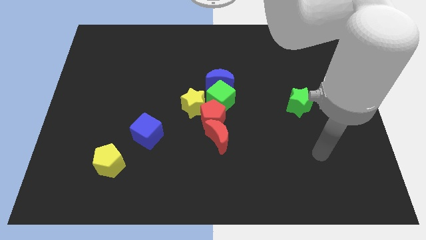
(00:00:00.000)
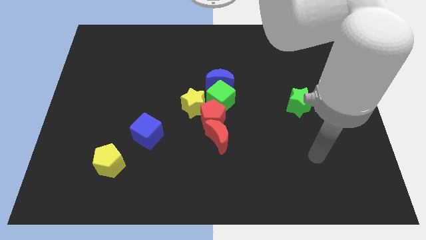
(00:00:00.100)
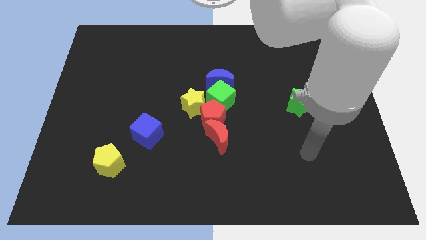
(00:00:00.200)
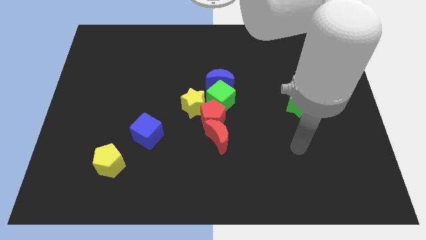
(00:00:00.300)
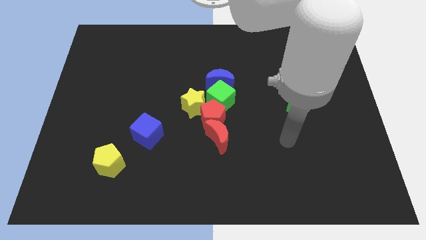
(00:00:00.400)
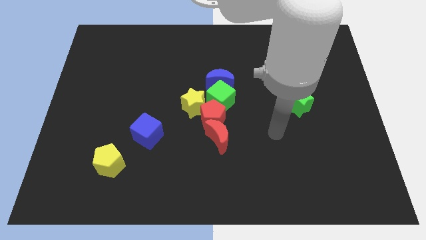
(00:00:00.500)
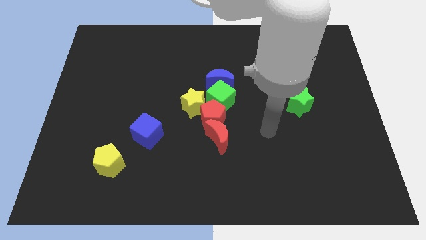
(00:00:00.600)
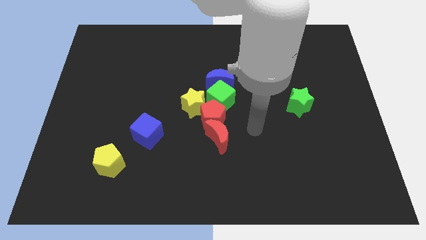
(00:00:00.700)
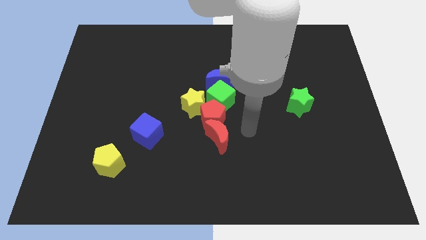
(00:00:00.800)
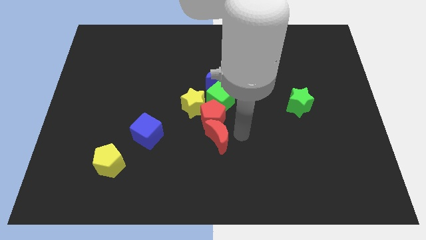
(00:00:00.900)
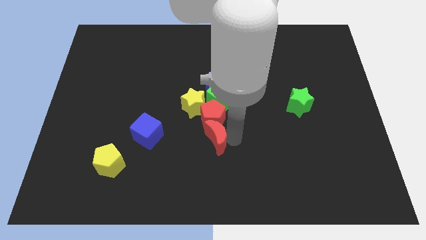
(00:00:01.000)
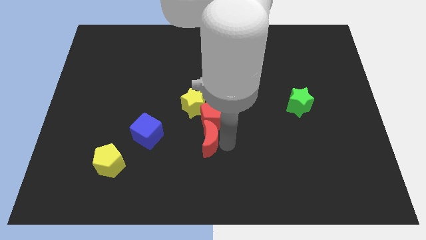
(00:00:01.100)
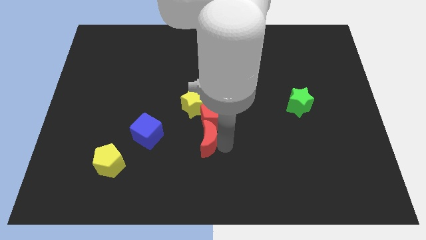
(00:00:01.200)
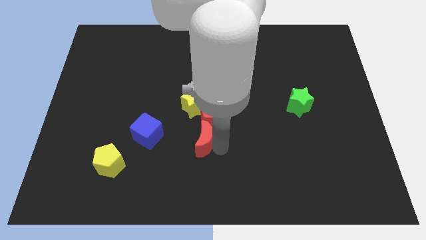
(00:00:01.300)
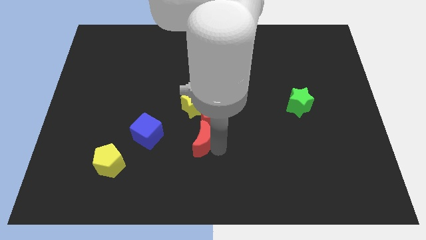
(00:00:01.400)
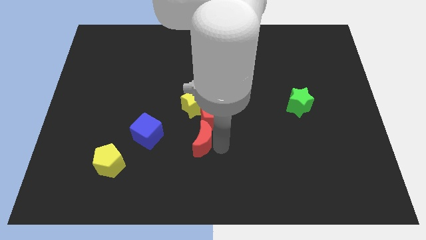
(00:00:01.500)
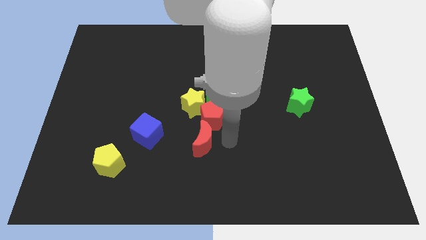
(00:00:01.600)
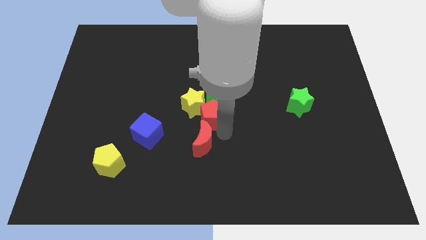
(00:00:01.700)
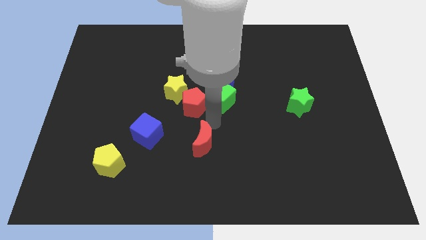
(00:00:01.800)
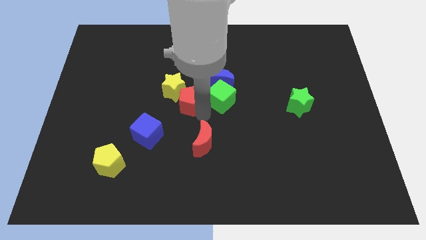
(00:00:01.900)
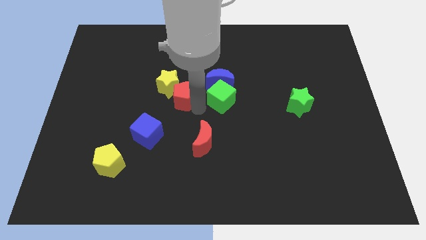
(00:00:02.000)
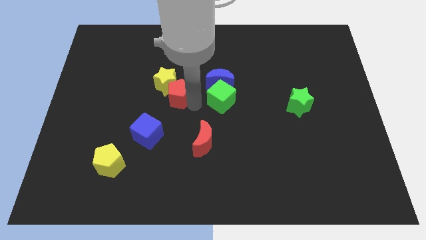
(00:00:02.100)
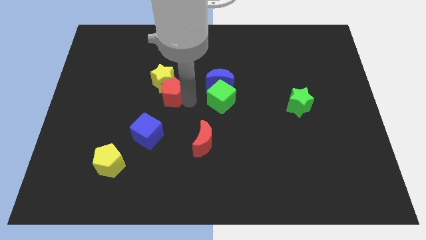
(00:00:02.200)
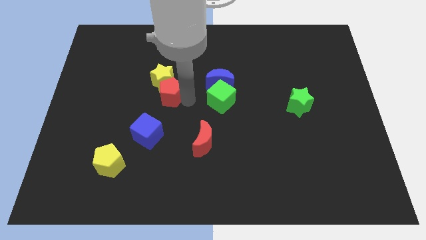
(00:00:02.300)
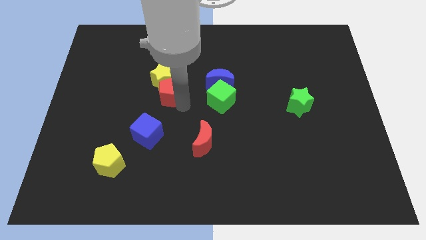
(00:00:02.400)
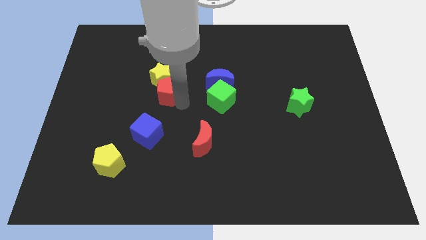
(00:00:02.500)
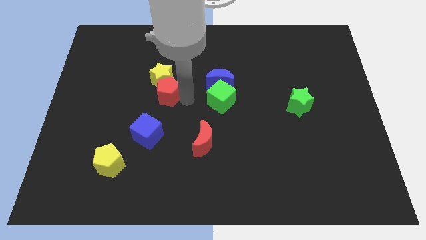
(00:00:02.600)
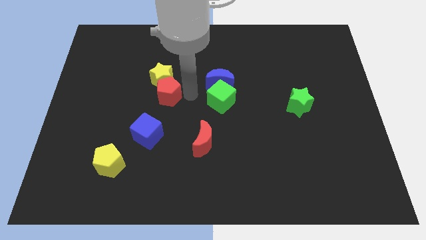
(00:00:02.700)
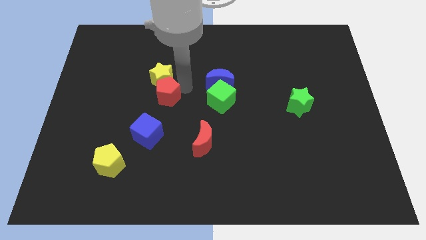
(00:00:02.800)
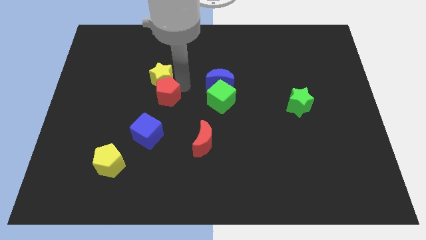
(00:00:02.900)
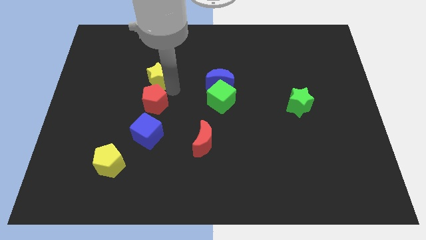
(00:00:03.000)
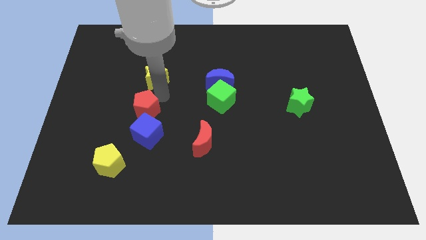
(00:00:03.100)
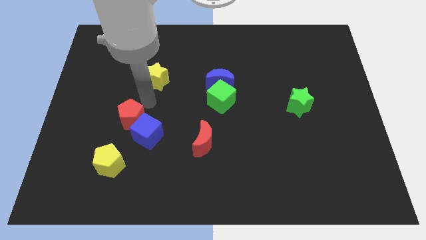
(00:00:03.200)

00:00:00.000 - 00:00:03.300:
put the red pentagon between the yellow star and blue cube

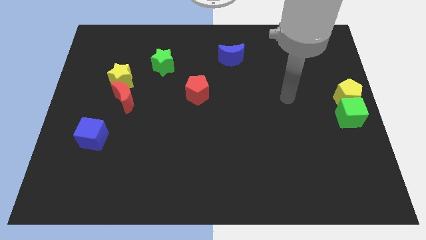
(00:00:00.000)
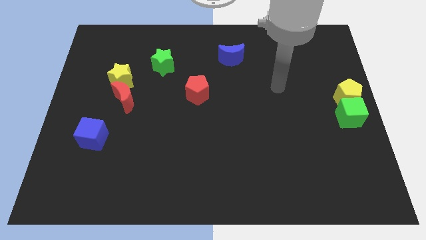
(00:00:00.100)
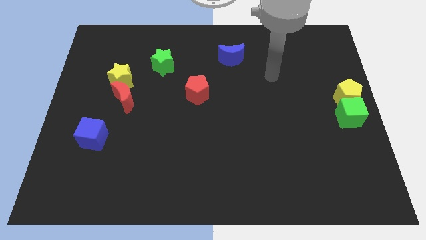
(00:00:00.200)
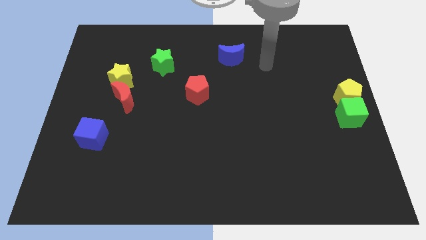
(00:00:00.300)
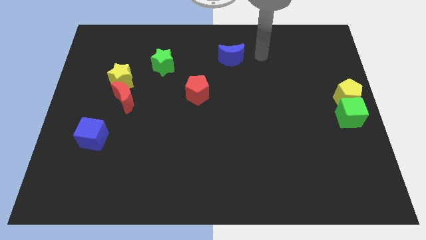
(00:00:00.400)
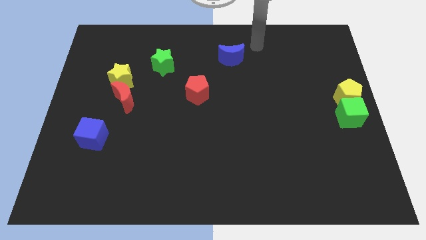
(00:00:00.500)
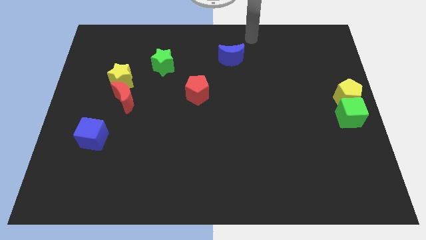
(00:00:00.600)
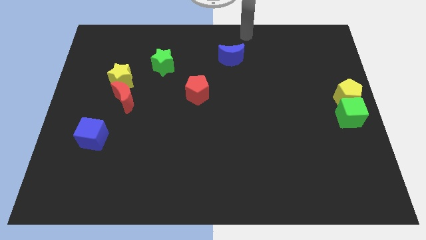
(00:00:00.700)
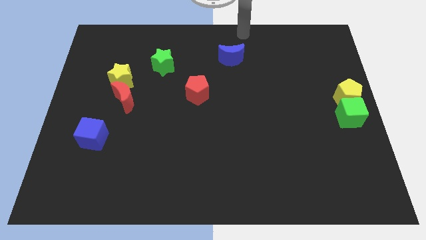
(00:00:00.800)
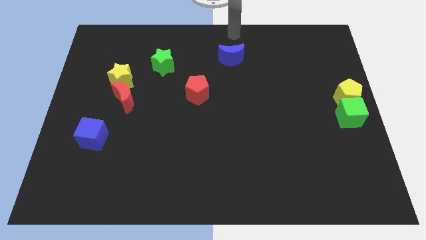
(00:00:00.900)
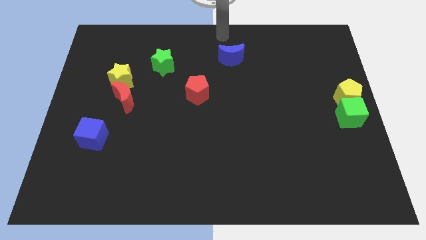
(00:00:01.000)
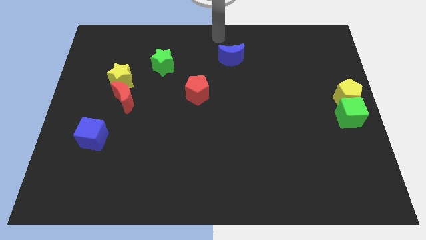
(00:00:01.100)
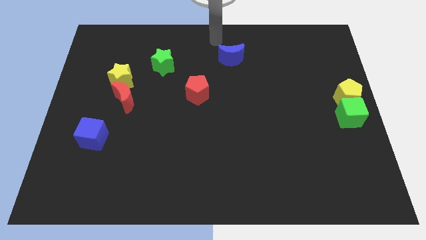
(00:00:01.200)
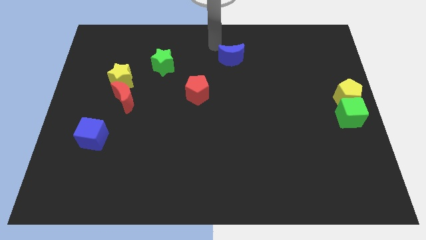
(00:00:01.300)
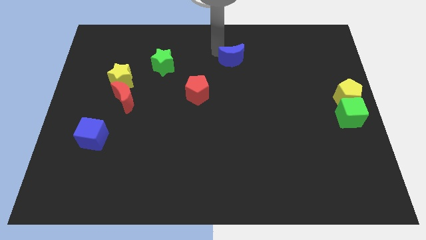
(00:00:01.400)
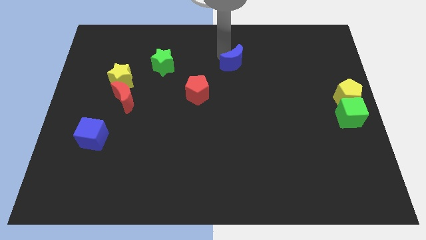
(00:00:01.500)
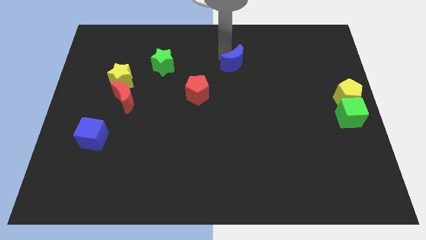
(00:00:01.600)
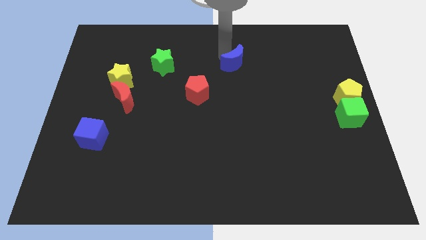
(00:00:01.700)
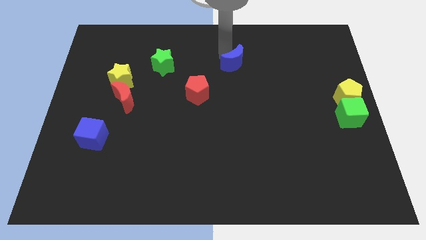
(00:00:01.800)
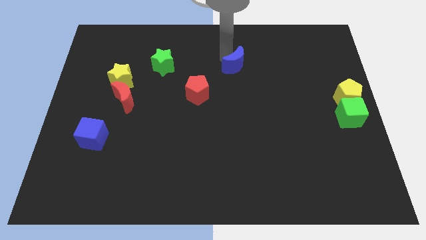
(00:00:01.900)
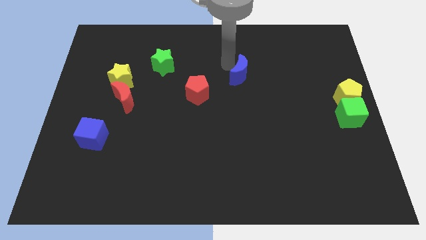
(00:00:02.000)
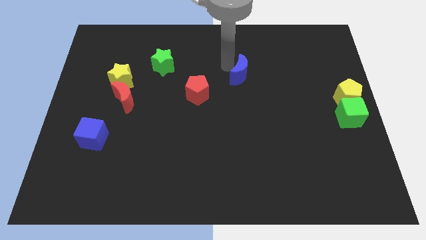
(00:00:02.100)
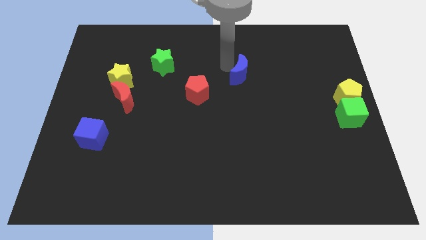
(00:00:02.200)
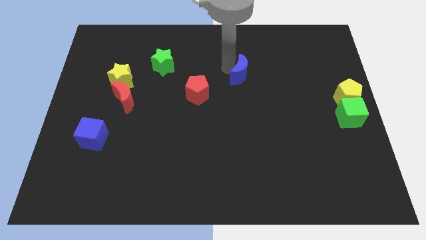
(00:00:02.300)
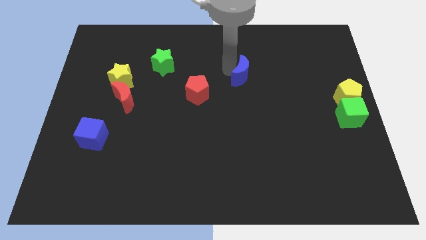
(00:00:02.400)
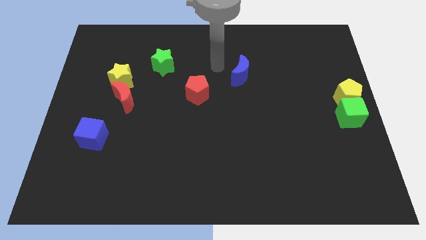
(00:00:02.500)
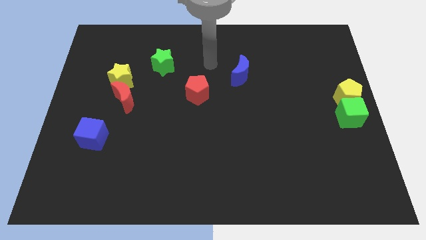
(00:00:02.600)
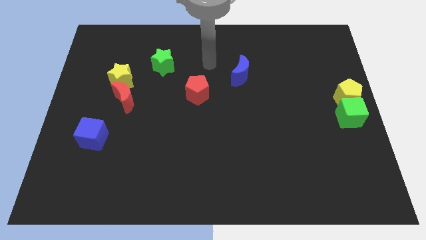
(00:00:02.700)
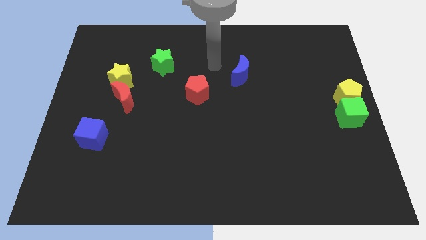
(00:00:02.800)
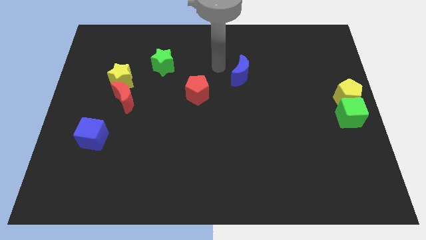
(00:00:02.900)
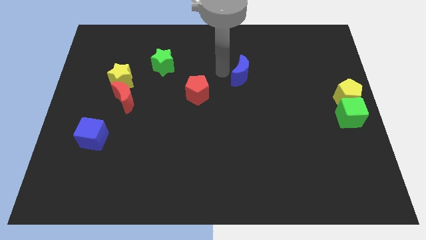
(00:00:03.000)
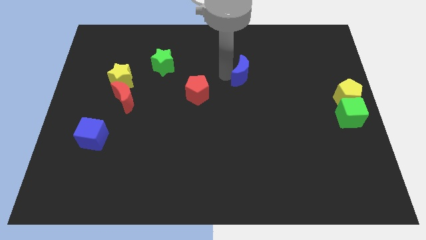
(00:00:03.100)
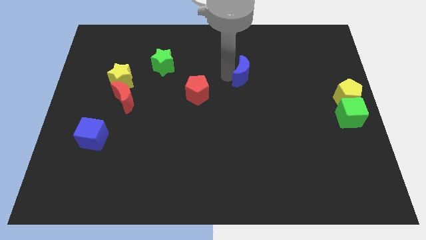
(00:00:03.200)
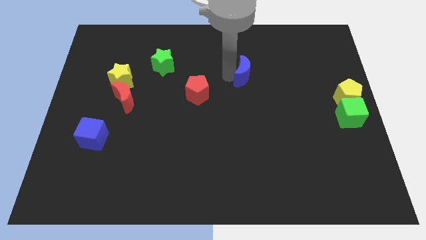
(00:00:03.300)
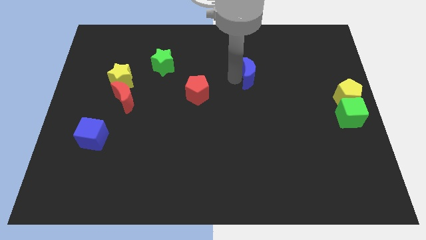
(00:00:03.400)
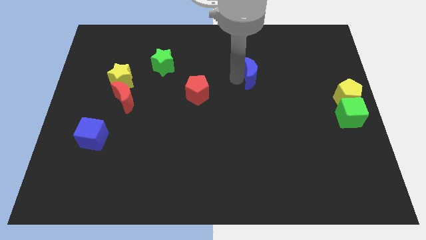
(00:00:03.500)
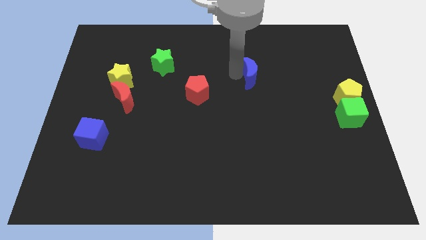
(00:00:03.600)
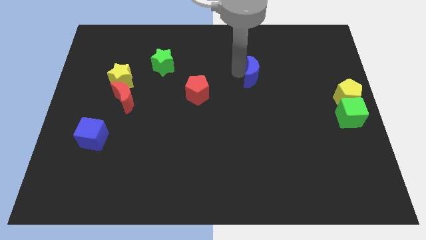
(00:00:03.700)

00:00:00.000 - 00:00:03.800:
move the blue crescent to the right center of the board

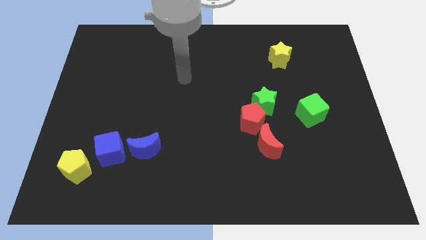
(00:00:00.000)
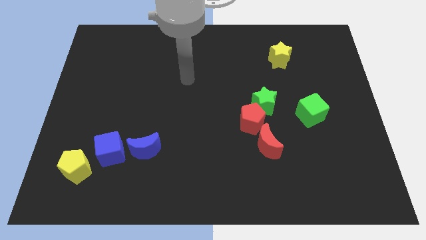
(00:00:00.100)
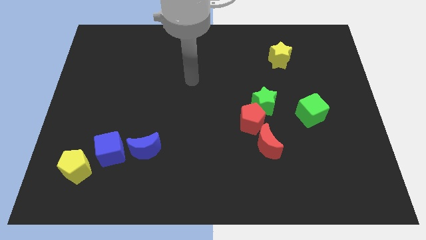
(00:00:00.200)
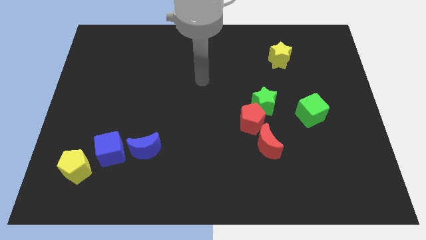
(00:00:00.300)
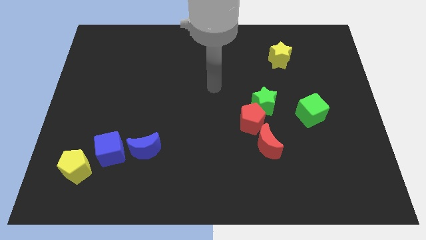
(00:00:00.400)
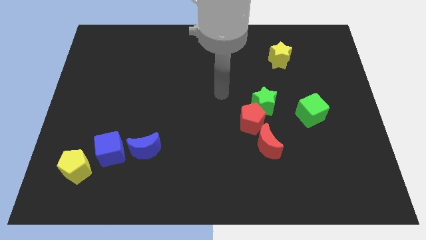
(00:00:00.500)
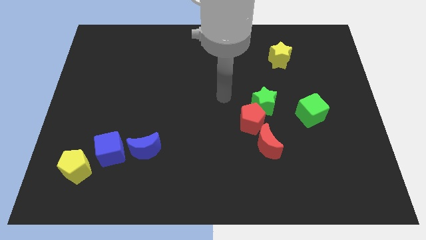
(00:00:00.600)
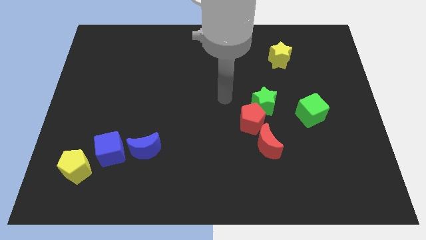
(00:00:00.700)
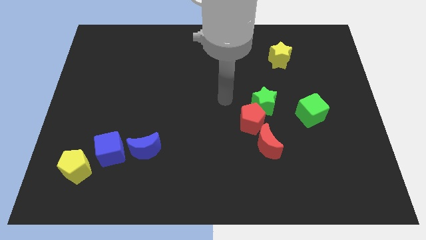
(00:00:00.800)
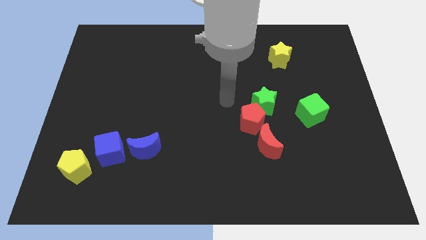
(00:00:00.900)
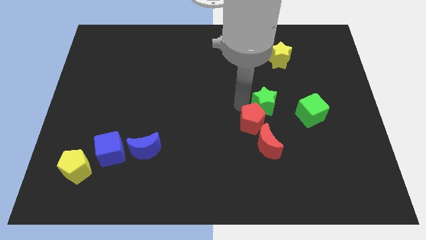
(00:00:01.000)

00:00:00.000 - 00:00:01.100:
point your arm at the left of the green star

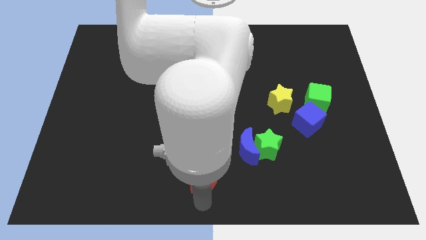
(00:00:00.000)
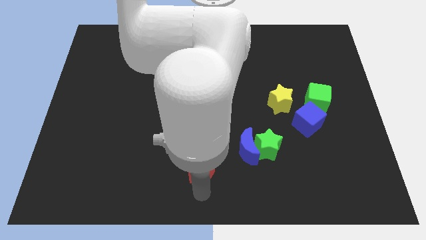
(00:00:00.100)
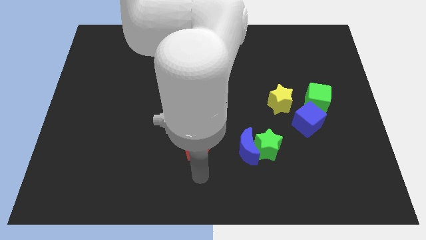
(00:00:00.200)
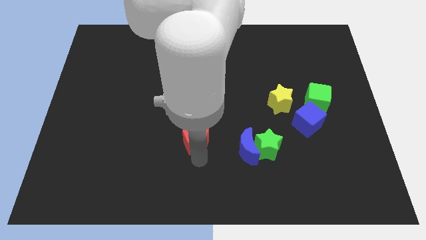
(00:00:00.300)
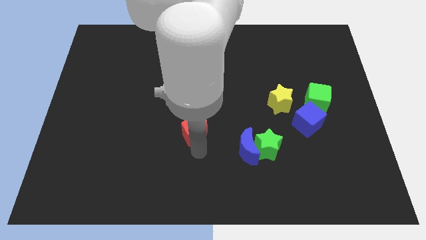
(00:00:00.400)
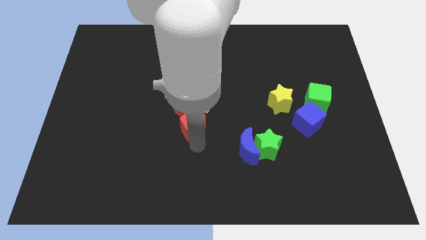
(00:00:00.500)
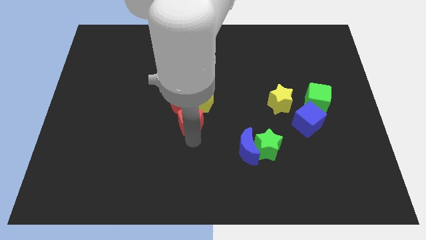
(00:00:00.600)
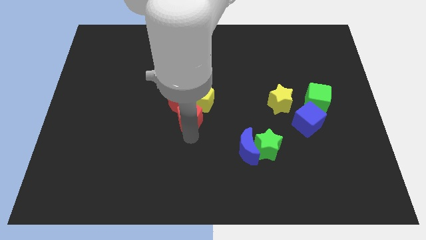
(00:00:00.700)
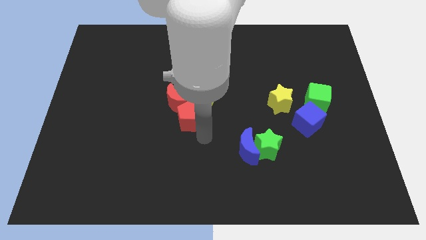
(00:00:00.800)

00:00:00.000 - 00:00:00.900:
move the red pentagon below the red crescent
